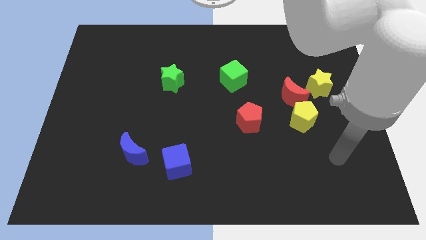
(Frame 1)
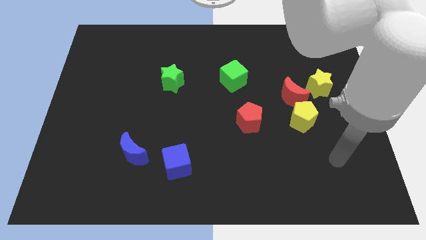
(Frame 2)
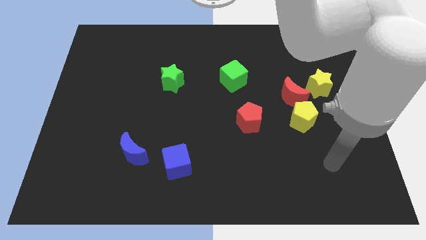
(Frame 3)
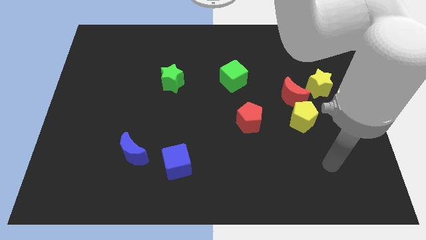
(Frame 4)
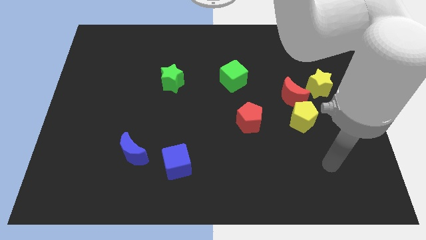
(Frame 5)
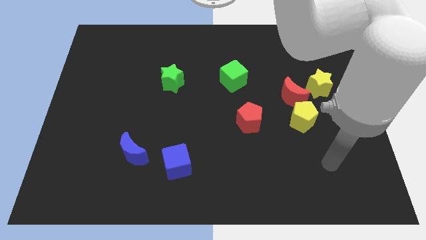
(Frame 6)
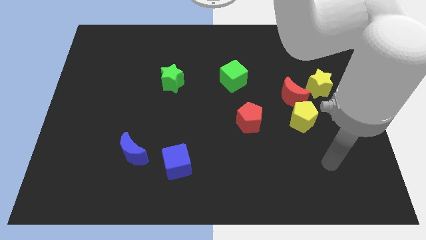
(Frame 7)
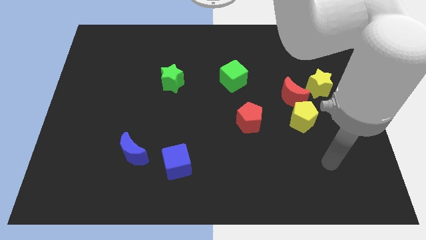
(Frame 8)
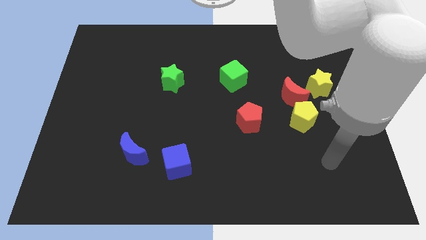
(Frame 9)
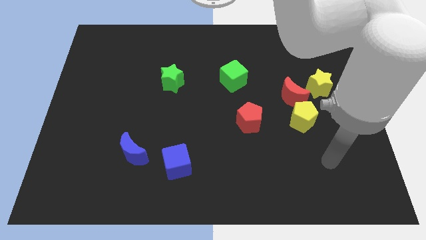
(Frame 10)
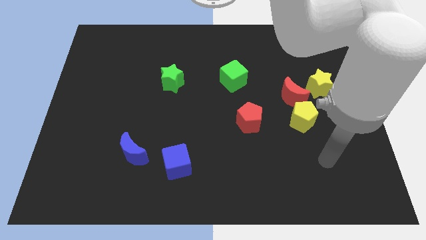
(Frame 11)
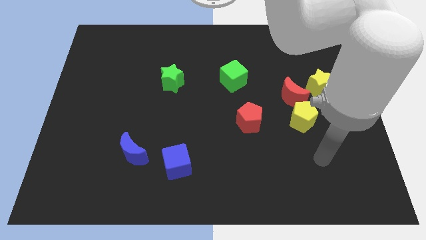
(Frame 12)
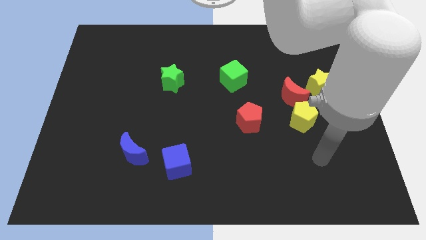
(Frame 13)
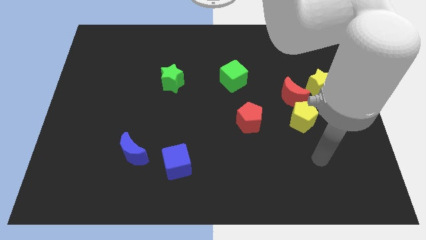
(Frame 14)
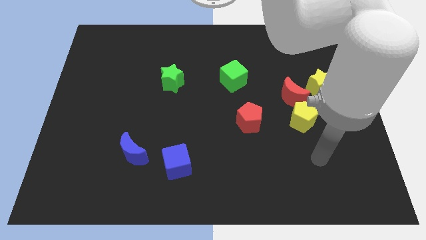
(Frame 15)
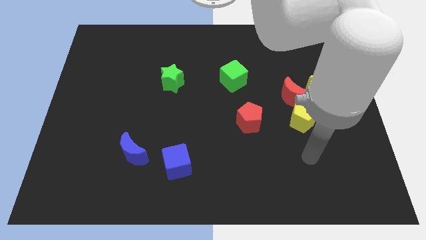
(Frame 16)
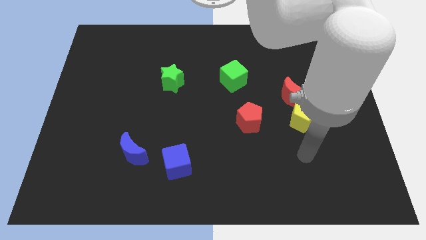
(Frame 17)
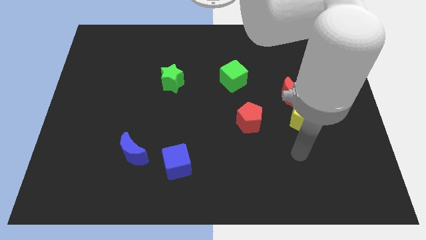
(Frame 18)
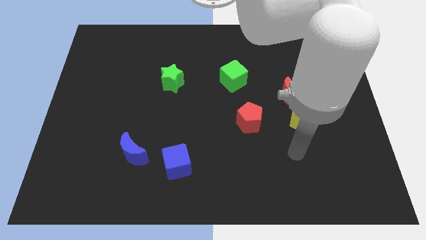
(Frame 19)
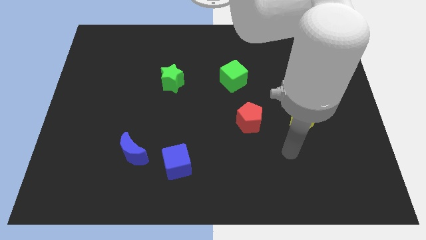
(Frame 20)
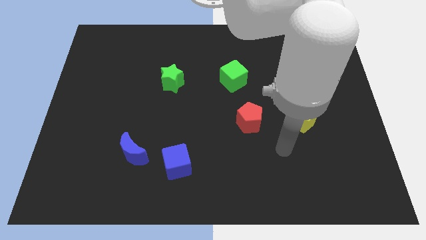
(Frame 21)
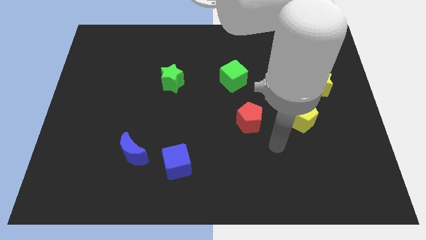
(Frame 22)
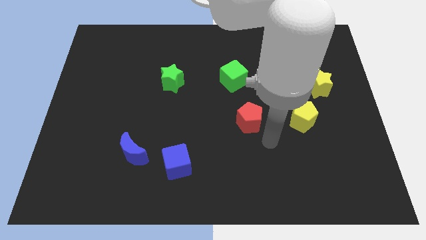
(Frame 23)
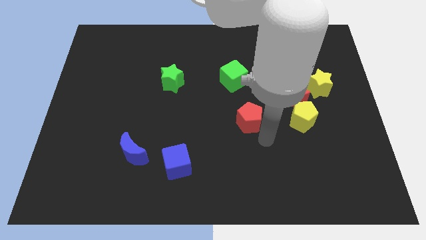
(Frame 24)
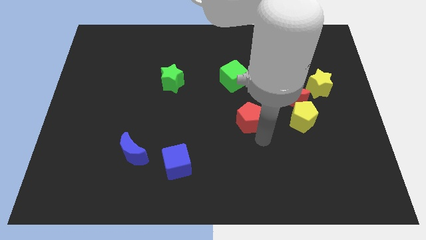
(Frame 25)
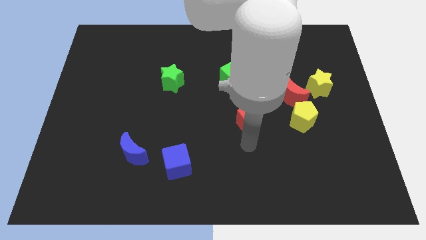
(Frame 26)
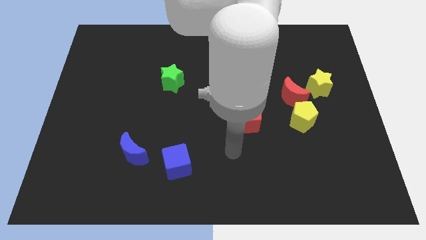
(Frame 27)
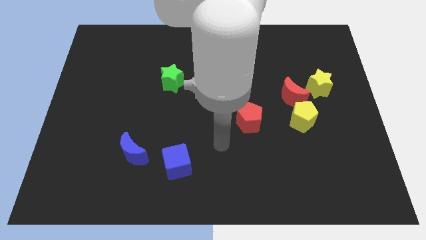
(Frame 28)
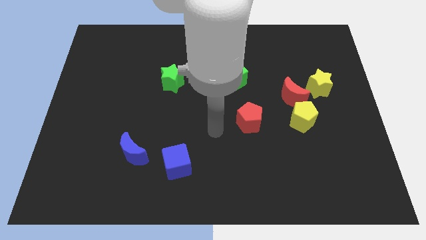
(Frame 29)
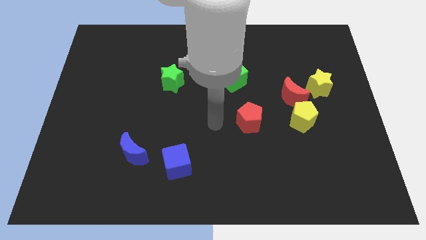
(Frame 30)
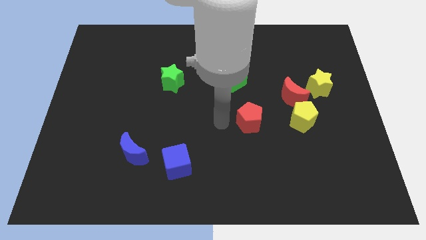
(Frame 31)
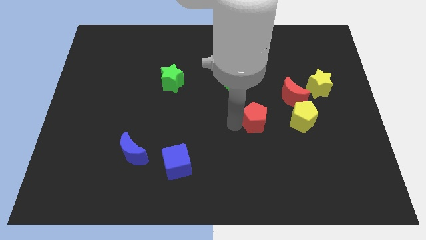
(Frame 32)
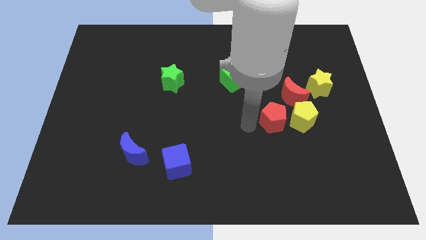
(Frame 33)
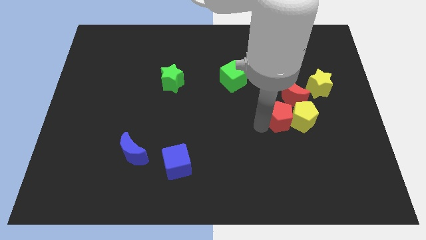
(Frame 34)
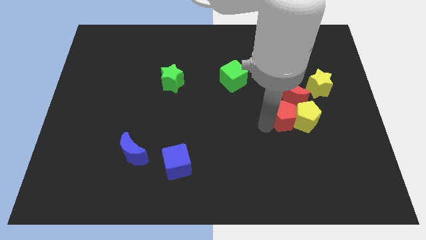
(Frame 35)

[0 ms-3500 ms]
make a triangle out of red blocks and the yellow pentagon

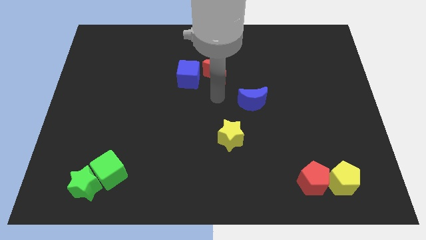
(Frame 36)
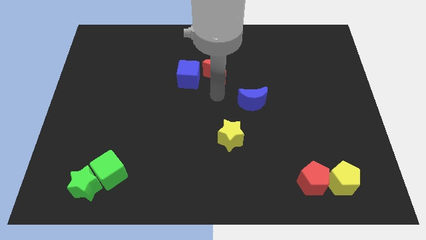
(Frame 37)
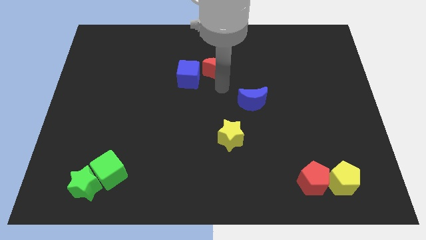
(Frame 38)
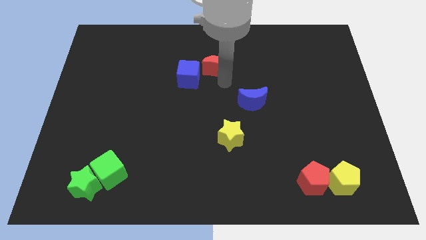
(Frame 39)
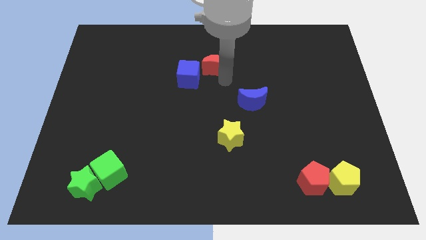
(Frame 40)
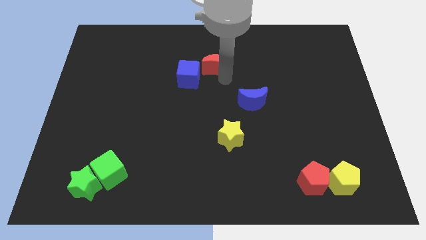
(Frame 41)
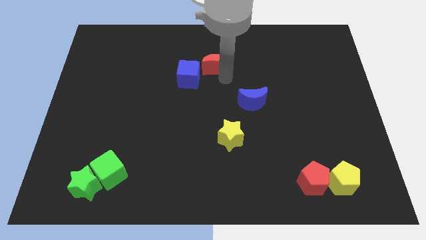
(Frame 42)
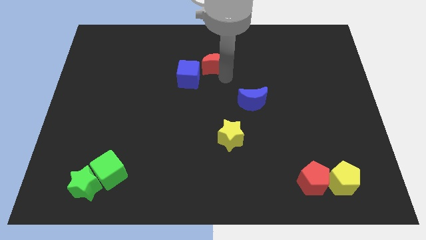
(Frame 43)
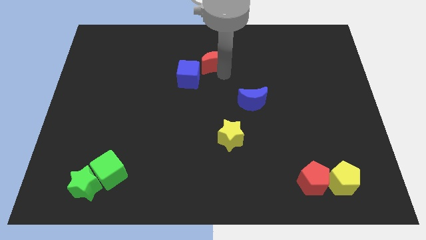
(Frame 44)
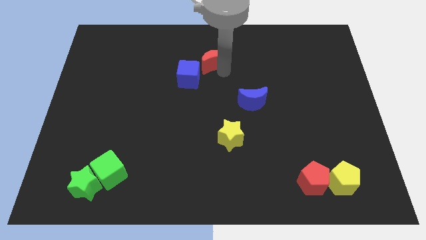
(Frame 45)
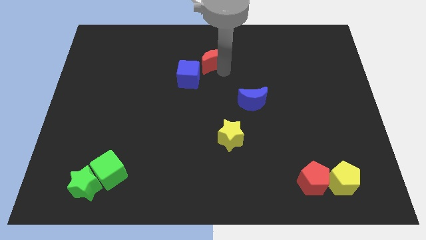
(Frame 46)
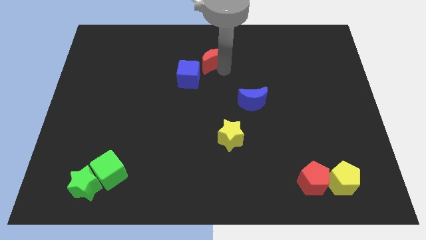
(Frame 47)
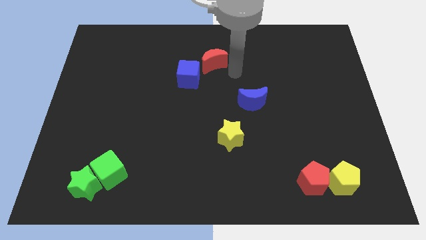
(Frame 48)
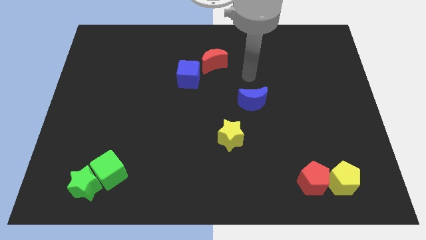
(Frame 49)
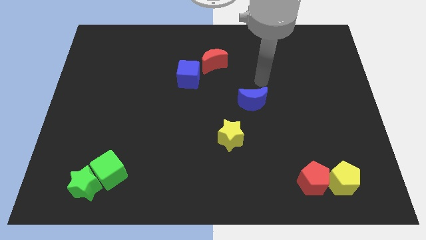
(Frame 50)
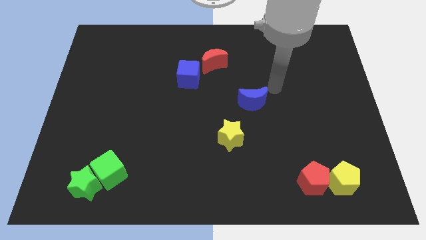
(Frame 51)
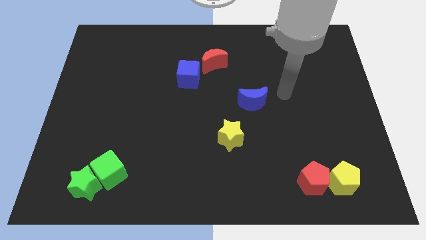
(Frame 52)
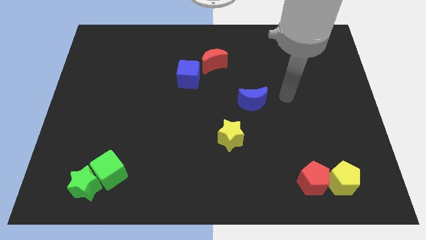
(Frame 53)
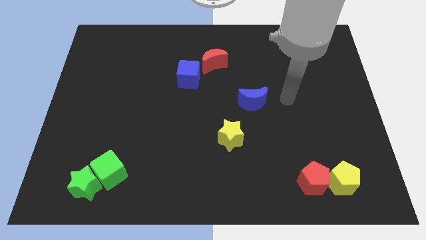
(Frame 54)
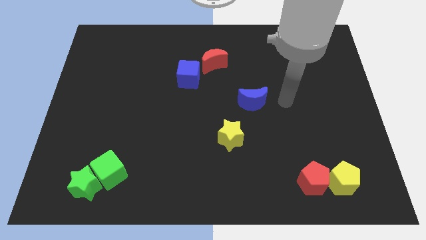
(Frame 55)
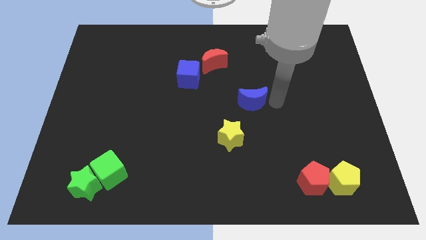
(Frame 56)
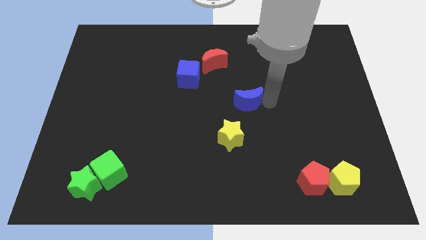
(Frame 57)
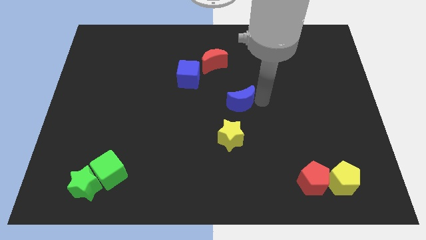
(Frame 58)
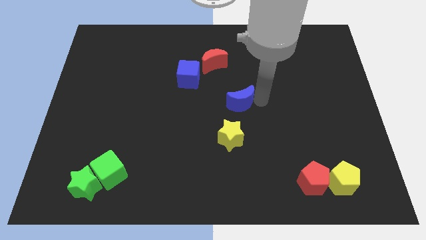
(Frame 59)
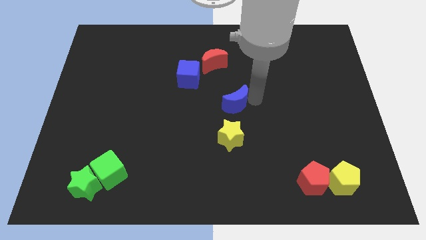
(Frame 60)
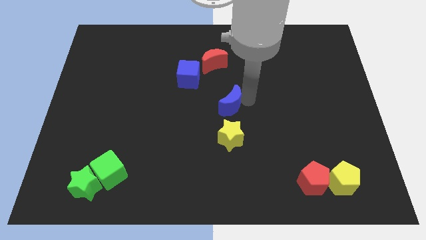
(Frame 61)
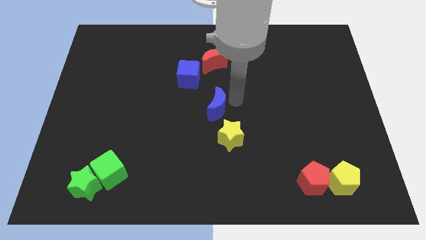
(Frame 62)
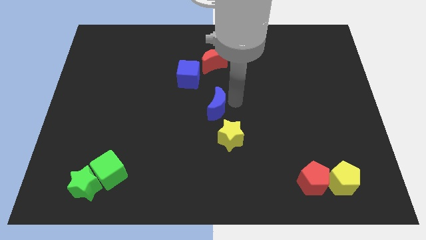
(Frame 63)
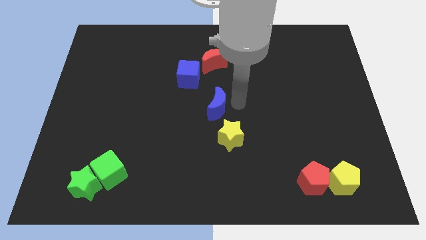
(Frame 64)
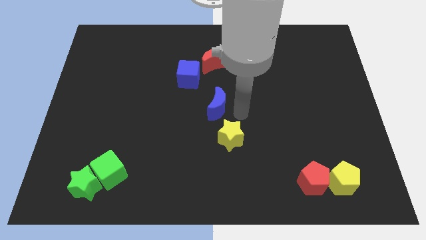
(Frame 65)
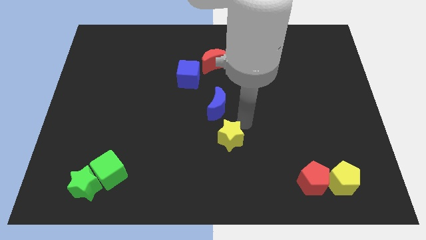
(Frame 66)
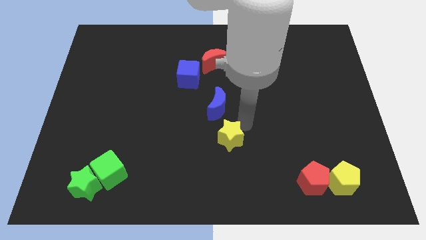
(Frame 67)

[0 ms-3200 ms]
move both the crescents vertical to each other

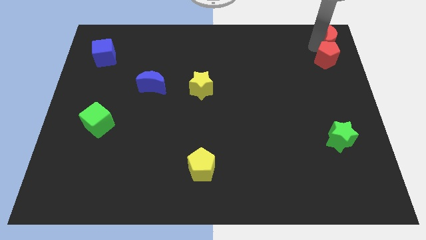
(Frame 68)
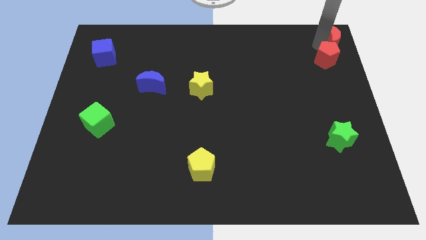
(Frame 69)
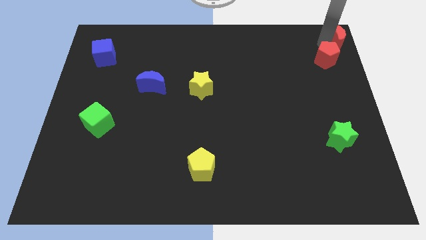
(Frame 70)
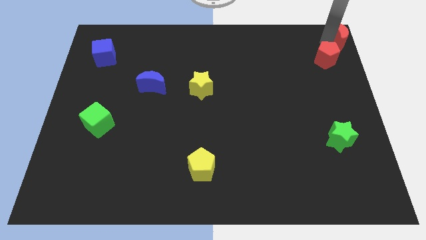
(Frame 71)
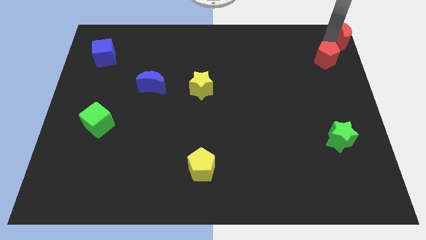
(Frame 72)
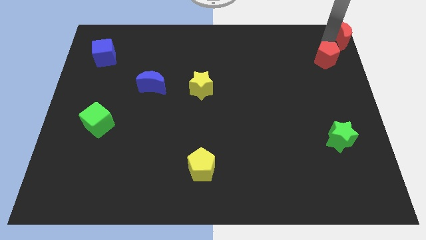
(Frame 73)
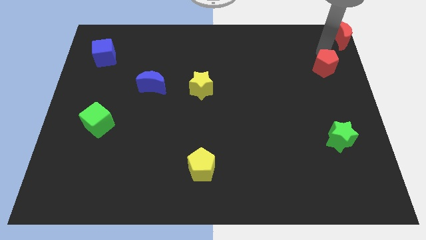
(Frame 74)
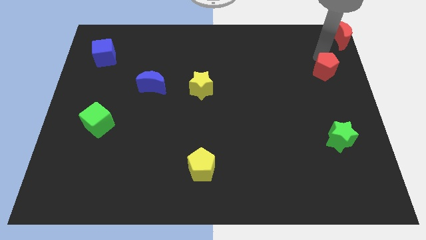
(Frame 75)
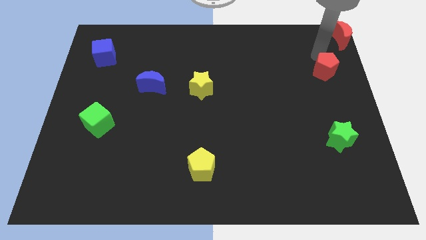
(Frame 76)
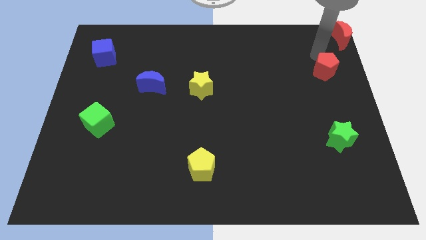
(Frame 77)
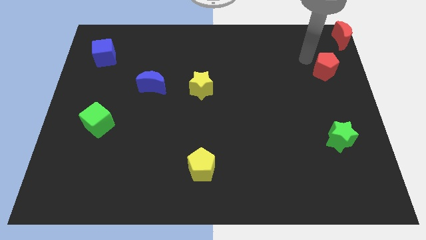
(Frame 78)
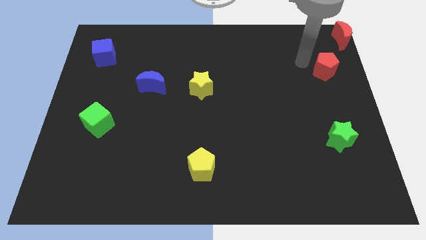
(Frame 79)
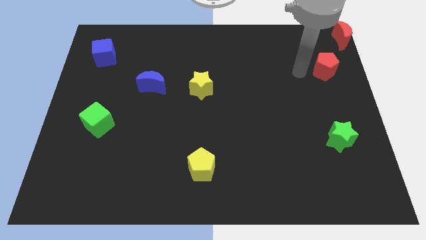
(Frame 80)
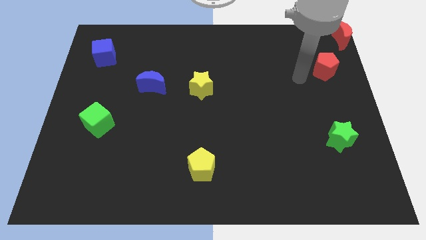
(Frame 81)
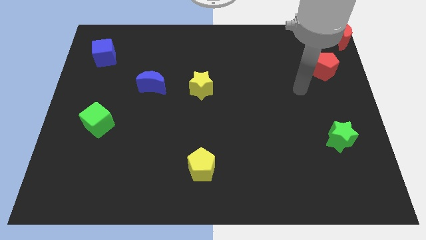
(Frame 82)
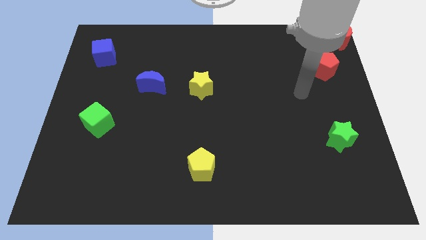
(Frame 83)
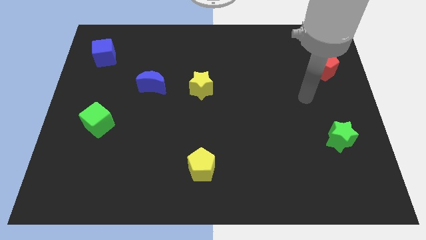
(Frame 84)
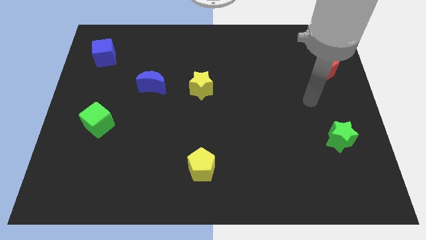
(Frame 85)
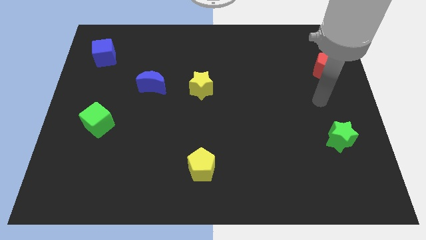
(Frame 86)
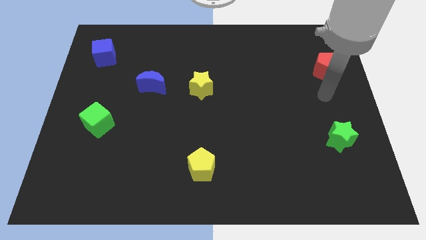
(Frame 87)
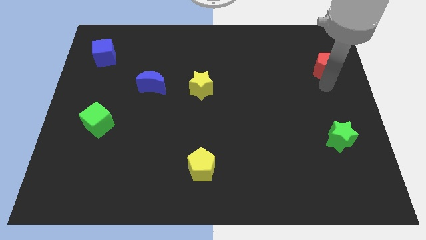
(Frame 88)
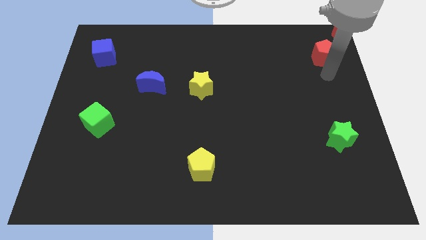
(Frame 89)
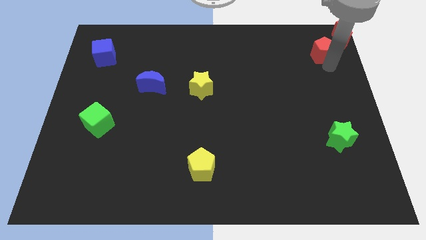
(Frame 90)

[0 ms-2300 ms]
push red pentagon slightly up

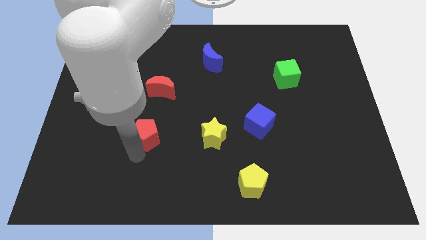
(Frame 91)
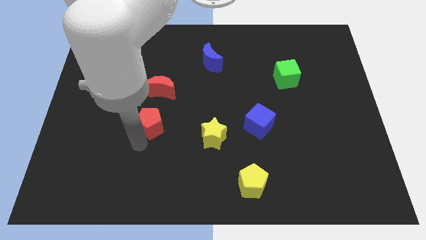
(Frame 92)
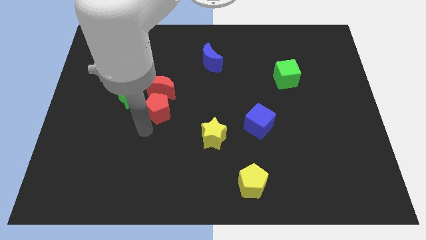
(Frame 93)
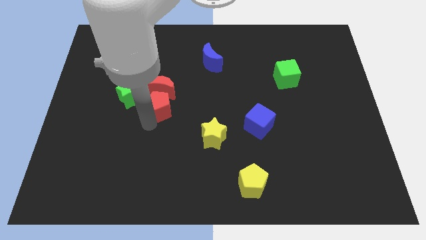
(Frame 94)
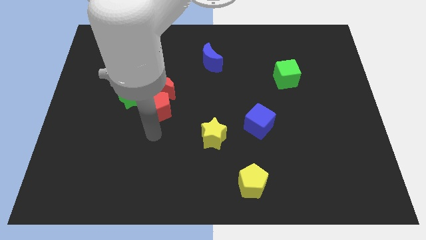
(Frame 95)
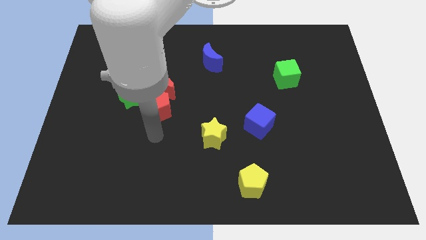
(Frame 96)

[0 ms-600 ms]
place the red pentagon below the red crescent
